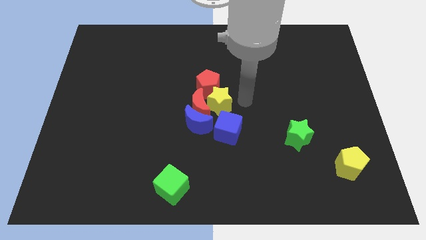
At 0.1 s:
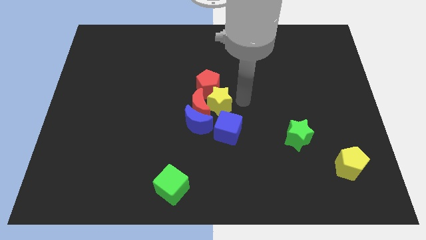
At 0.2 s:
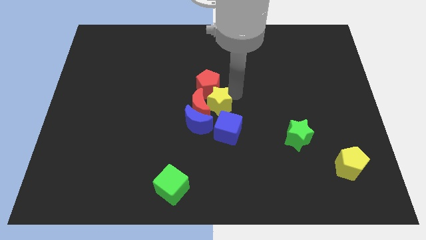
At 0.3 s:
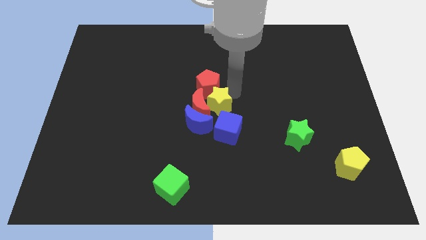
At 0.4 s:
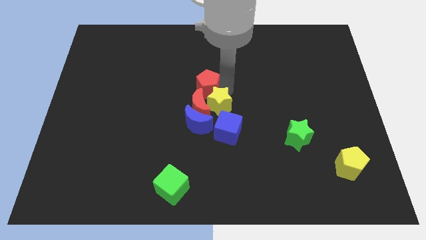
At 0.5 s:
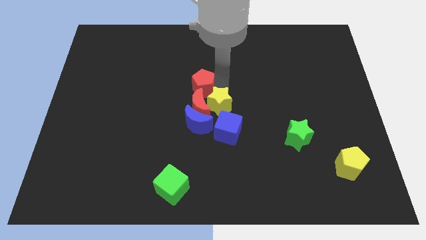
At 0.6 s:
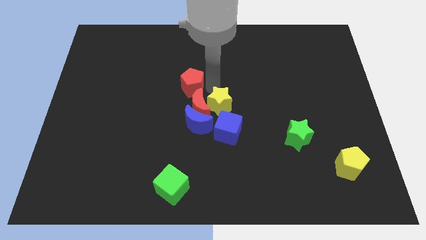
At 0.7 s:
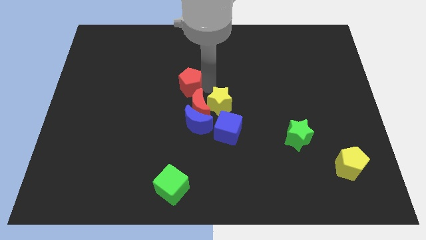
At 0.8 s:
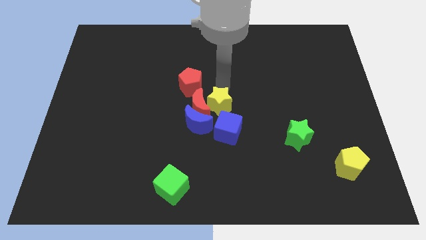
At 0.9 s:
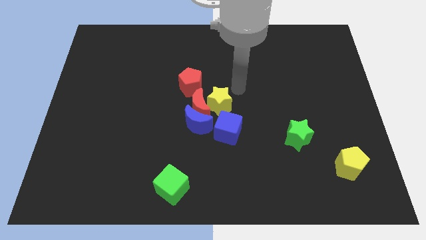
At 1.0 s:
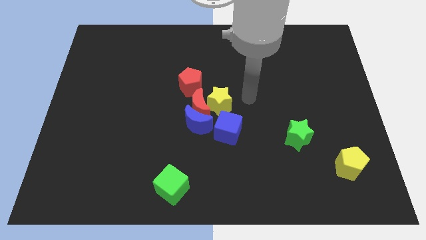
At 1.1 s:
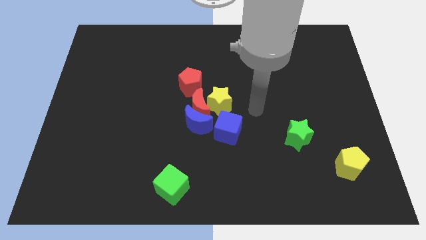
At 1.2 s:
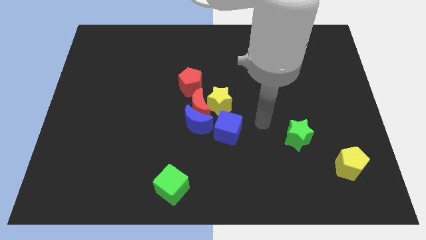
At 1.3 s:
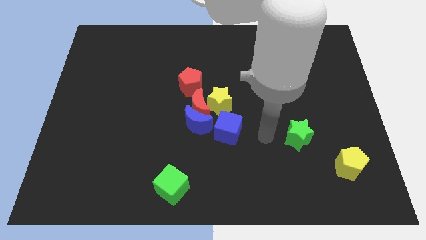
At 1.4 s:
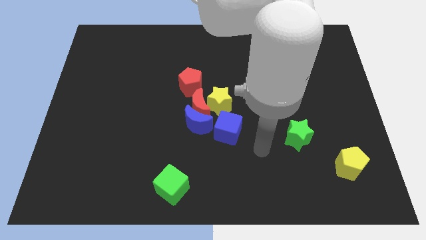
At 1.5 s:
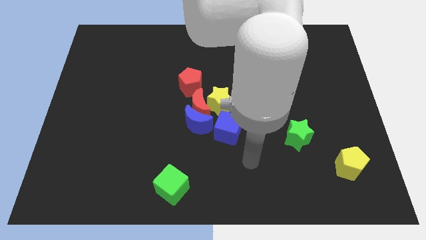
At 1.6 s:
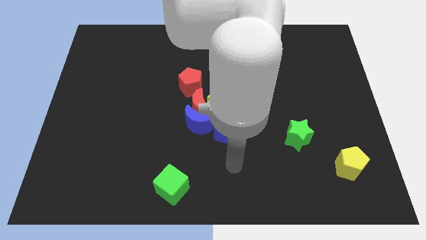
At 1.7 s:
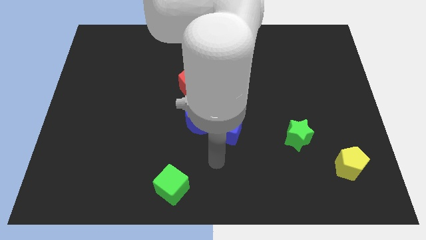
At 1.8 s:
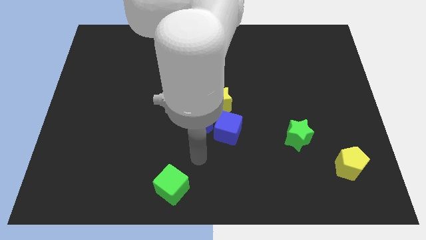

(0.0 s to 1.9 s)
move red pentagon slightly to the left side

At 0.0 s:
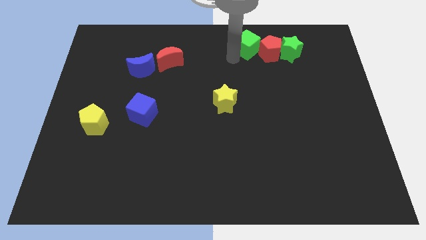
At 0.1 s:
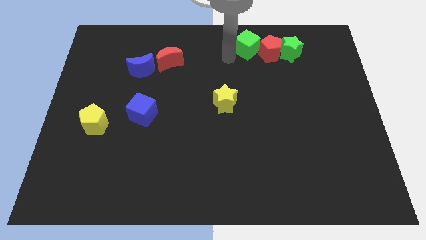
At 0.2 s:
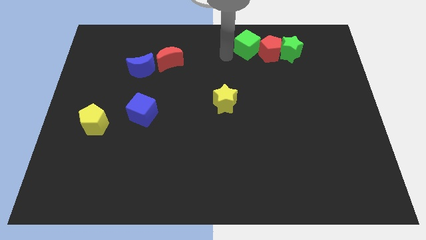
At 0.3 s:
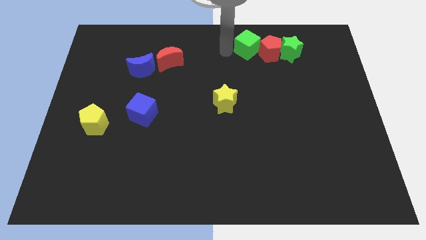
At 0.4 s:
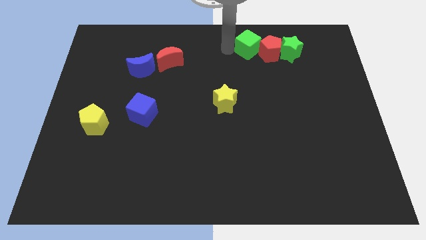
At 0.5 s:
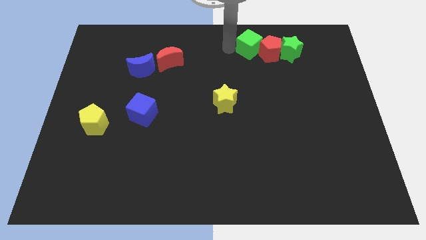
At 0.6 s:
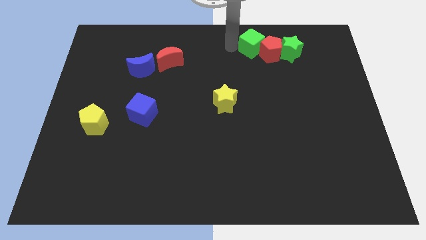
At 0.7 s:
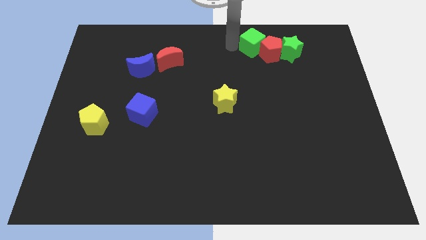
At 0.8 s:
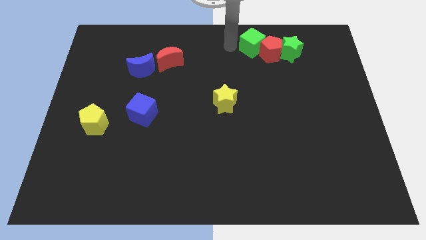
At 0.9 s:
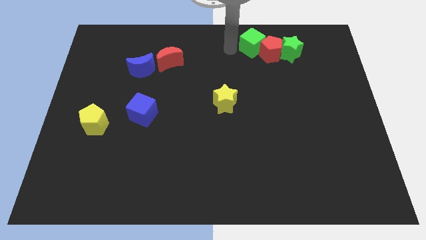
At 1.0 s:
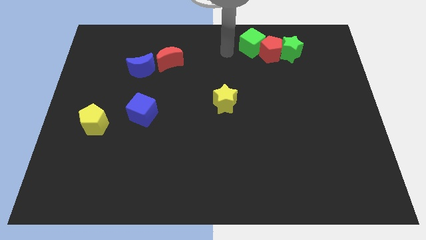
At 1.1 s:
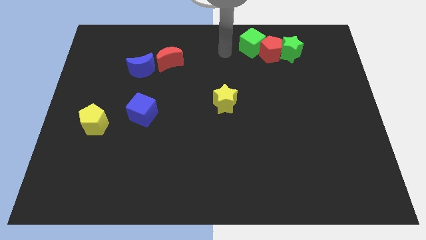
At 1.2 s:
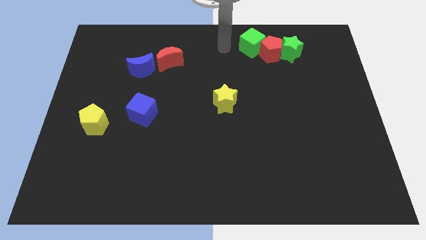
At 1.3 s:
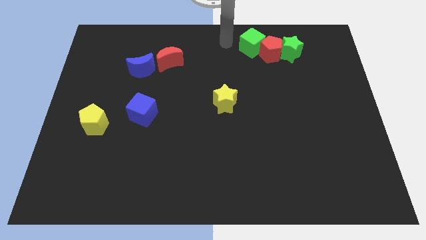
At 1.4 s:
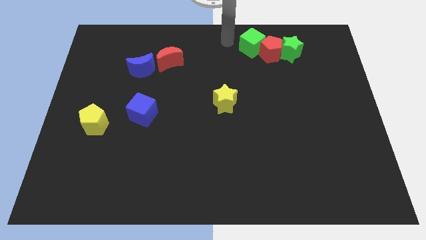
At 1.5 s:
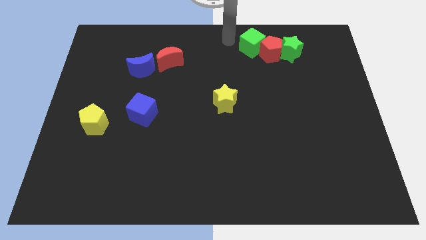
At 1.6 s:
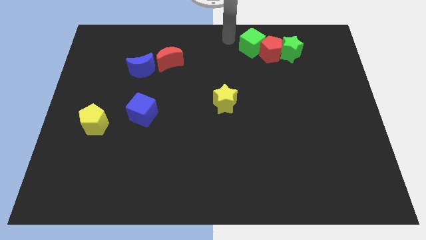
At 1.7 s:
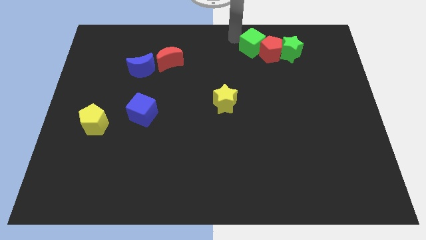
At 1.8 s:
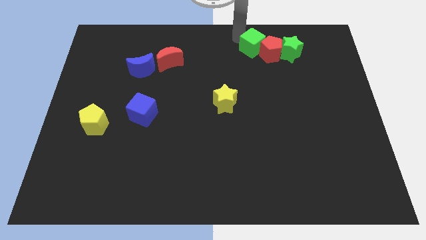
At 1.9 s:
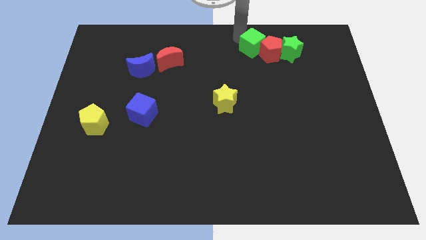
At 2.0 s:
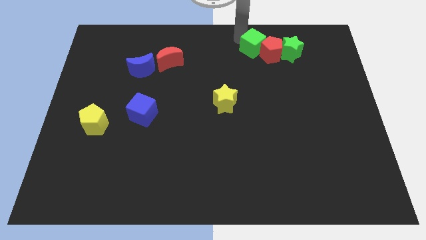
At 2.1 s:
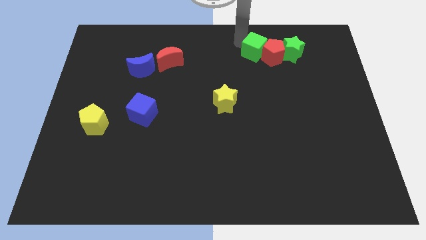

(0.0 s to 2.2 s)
push the green cube slightly to the right and move the arm away from the green cube

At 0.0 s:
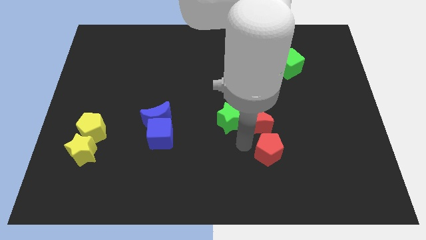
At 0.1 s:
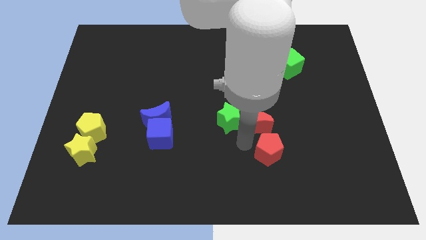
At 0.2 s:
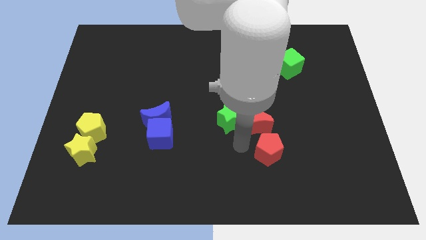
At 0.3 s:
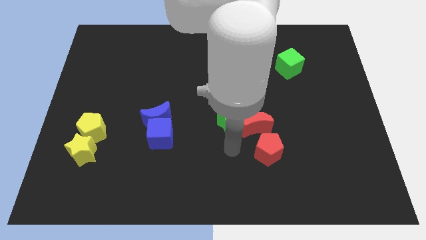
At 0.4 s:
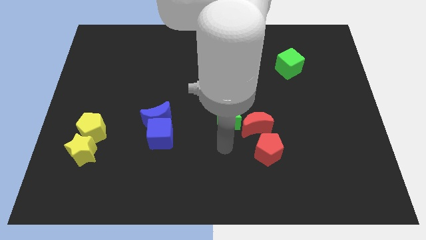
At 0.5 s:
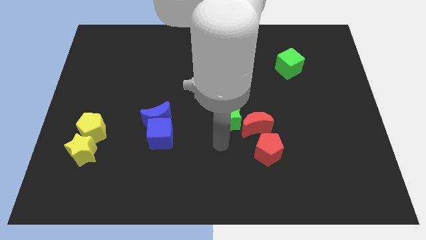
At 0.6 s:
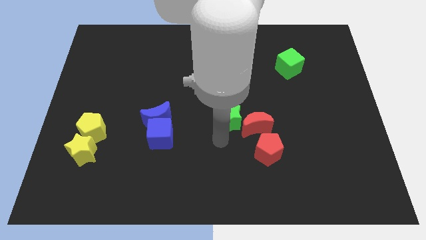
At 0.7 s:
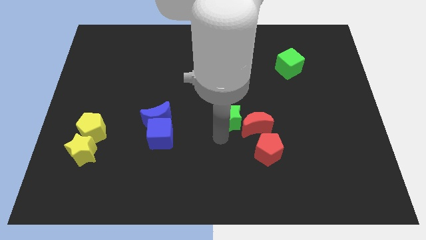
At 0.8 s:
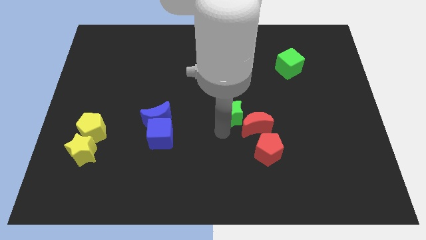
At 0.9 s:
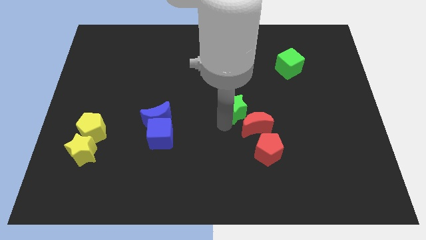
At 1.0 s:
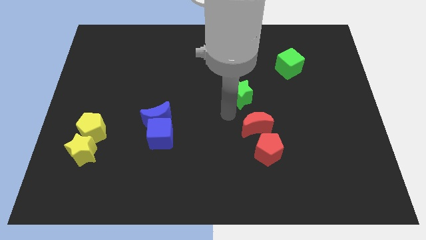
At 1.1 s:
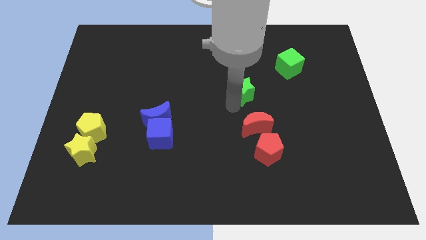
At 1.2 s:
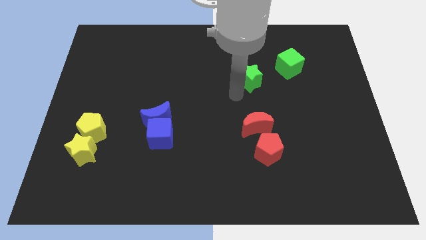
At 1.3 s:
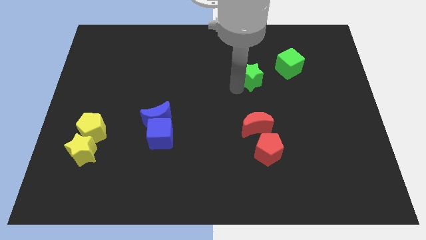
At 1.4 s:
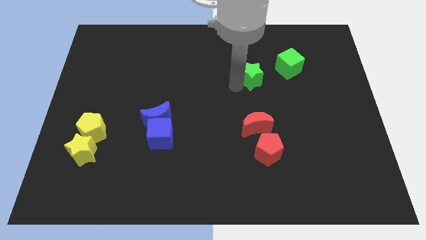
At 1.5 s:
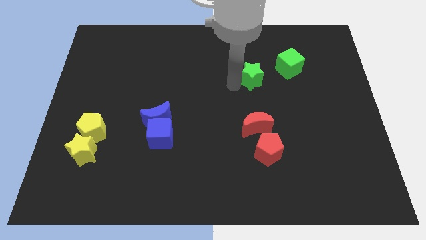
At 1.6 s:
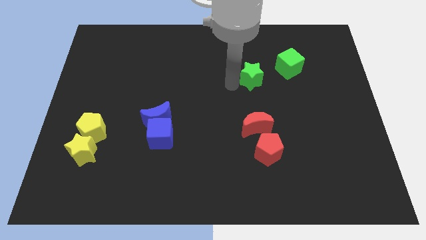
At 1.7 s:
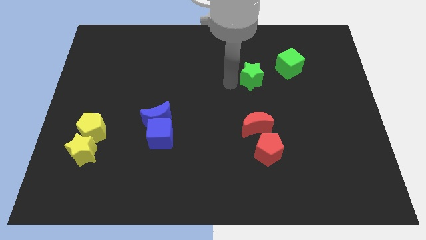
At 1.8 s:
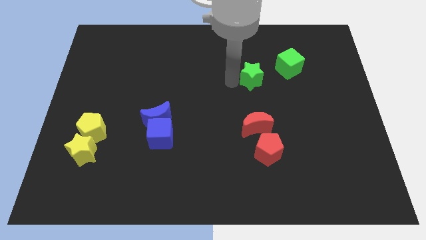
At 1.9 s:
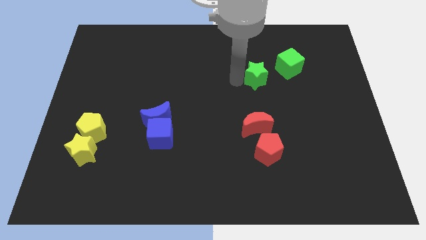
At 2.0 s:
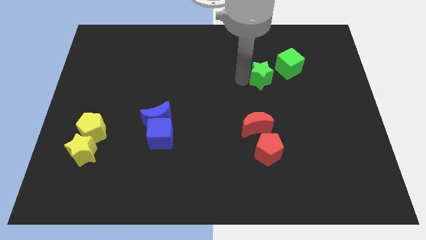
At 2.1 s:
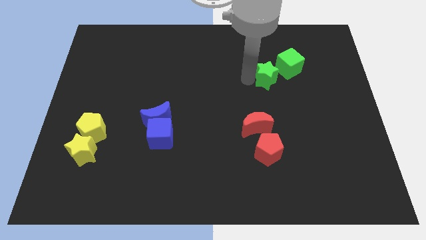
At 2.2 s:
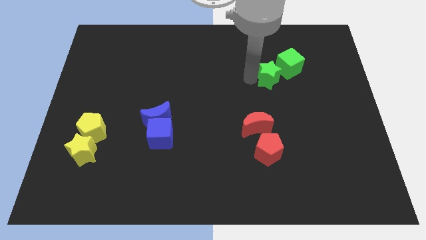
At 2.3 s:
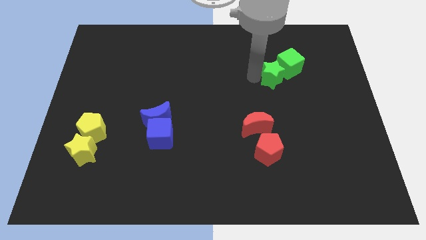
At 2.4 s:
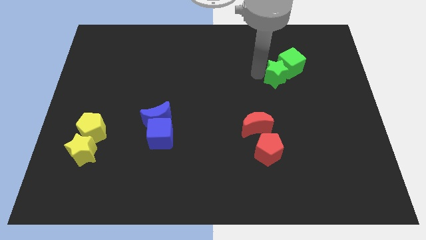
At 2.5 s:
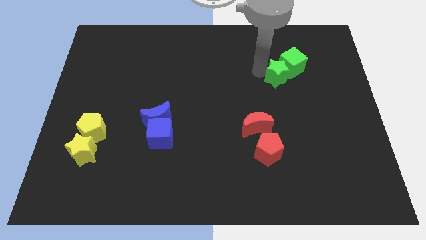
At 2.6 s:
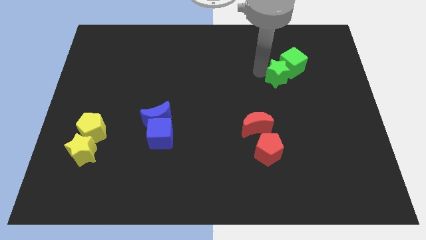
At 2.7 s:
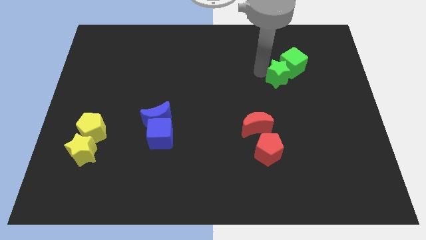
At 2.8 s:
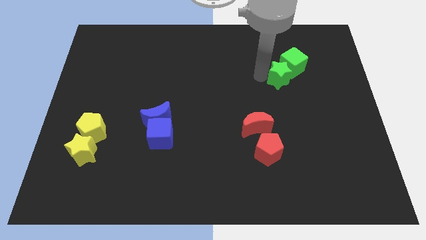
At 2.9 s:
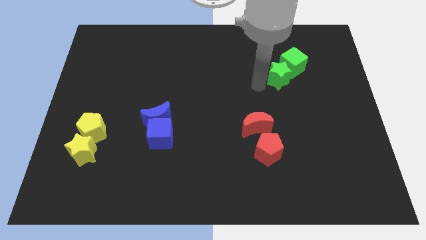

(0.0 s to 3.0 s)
push the green star into the green cube

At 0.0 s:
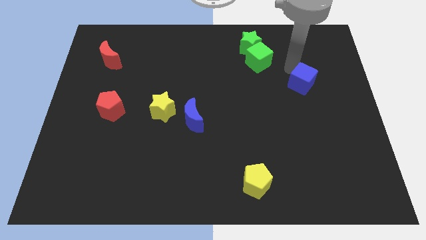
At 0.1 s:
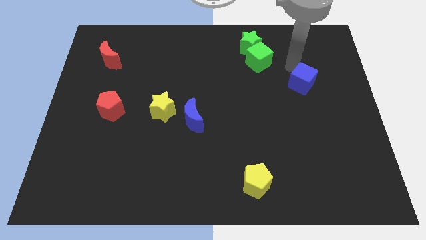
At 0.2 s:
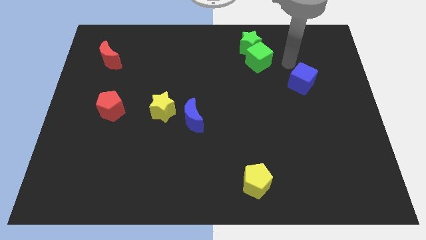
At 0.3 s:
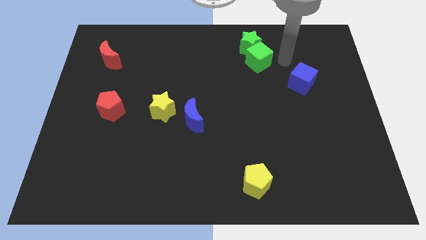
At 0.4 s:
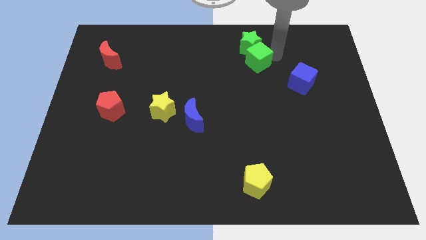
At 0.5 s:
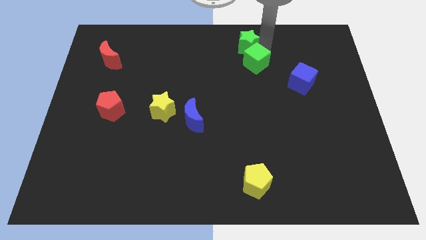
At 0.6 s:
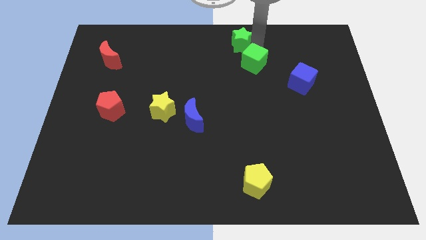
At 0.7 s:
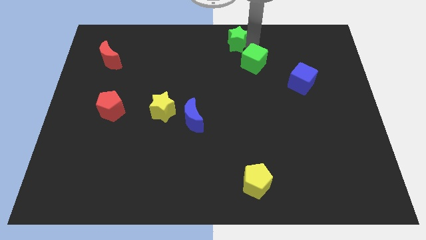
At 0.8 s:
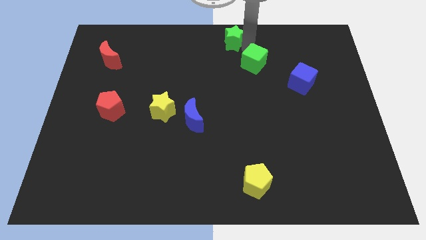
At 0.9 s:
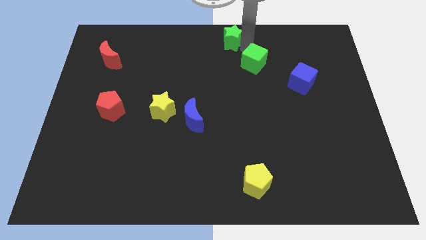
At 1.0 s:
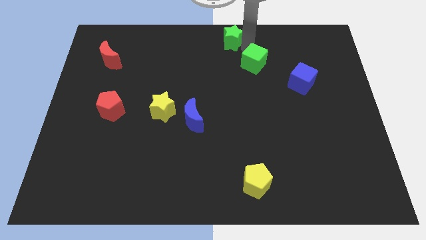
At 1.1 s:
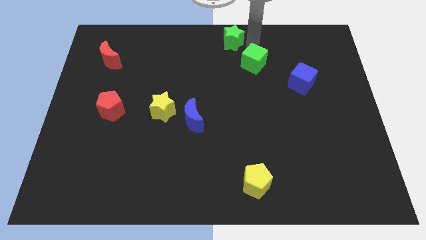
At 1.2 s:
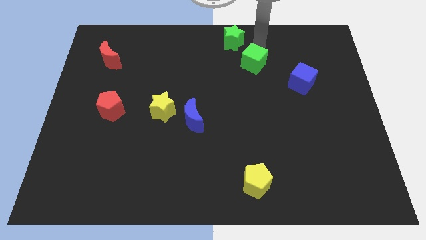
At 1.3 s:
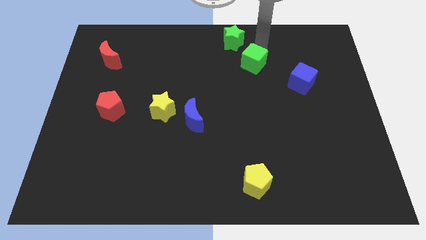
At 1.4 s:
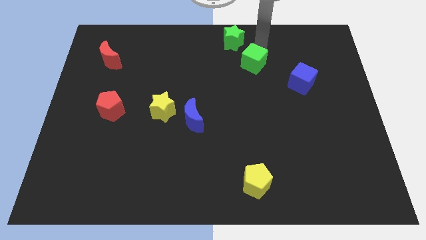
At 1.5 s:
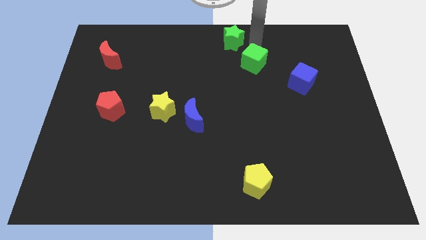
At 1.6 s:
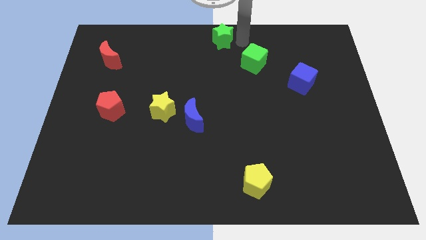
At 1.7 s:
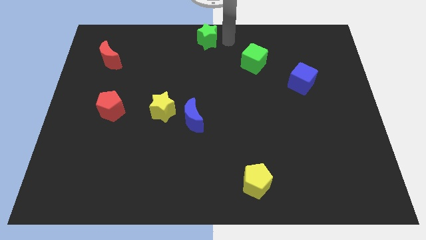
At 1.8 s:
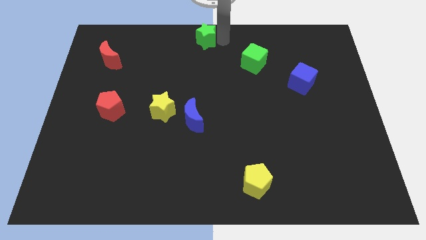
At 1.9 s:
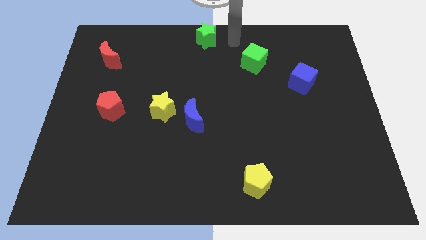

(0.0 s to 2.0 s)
separate green star from green cube
